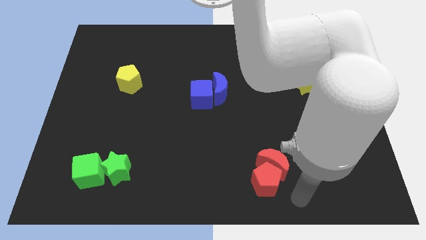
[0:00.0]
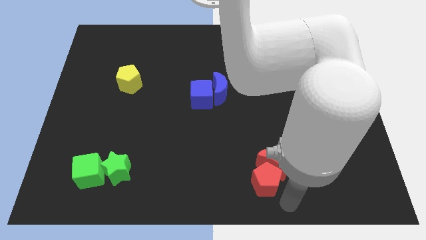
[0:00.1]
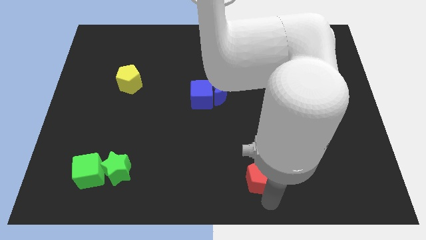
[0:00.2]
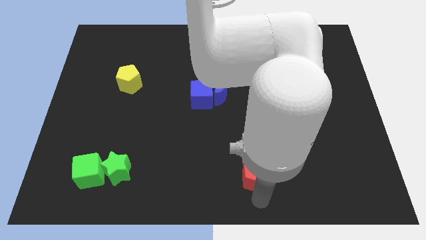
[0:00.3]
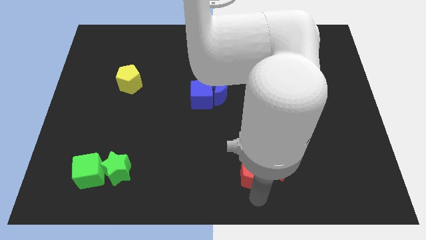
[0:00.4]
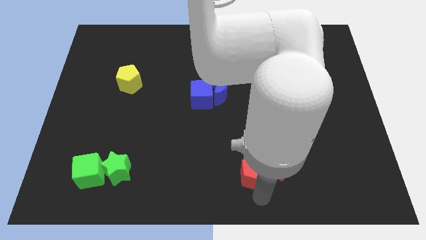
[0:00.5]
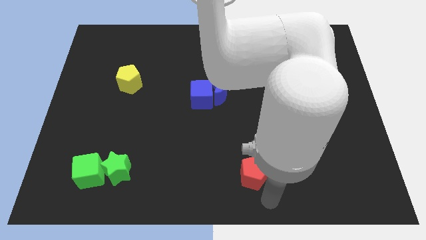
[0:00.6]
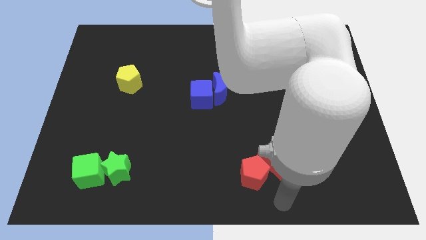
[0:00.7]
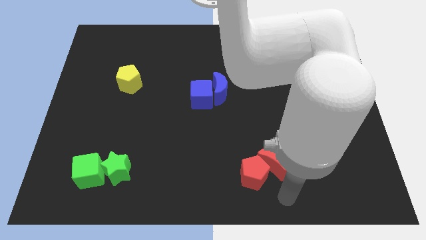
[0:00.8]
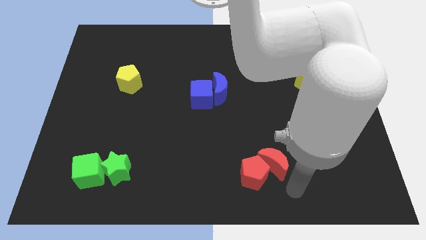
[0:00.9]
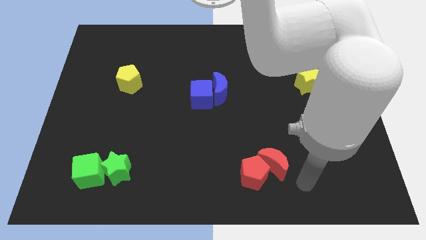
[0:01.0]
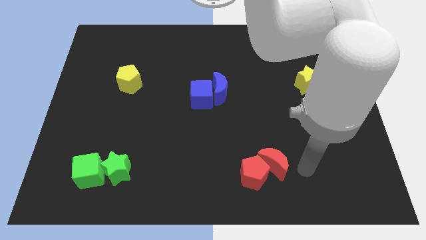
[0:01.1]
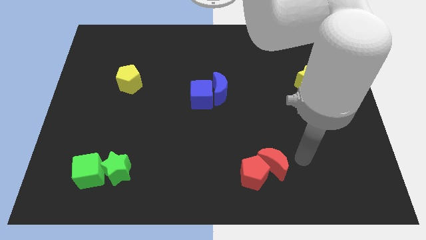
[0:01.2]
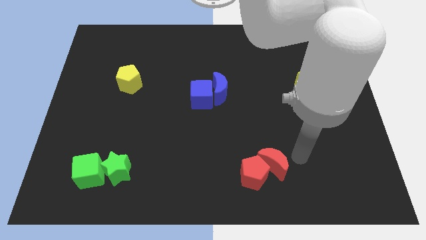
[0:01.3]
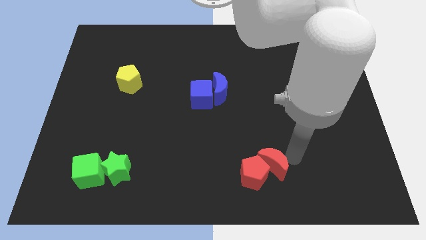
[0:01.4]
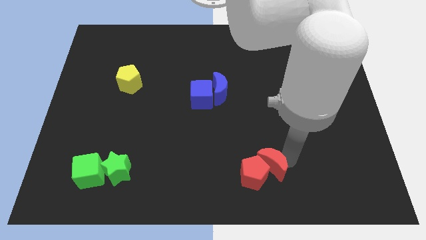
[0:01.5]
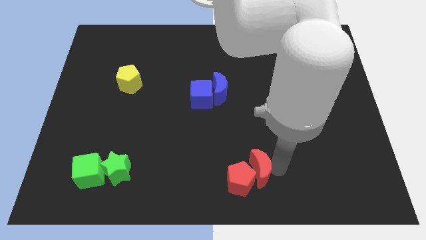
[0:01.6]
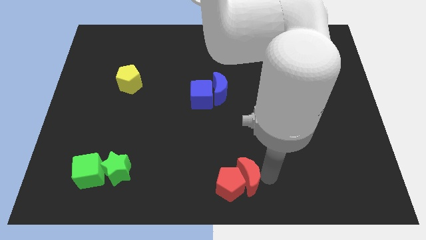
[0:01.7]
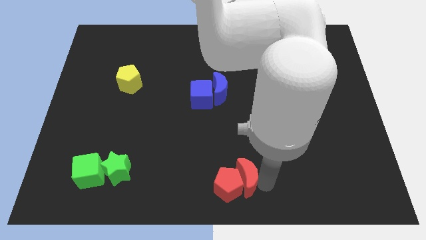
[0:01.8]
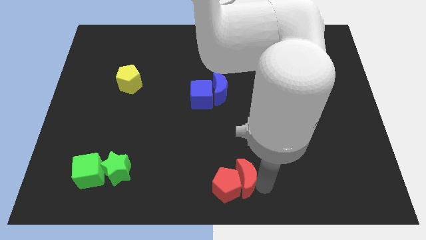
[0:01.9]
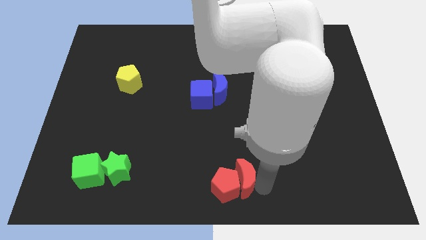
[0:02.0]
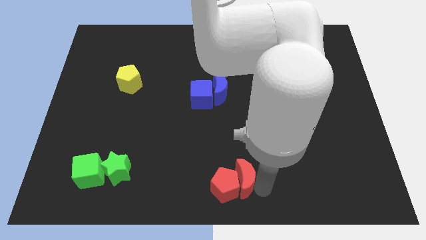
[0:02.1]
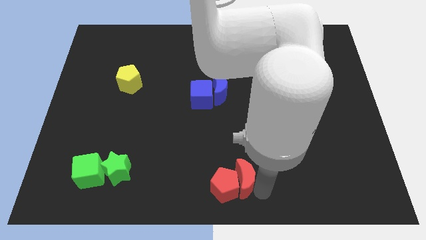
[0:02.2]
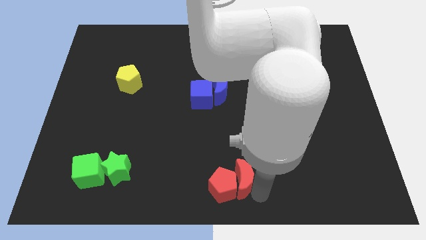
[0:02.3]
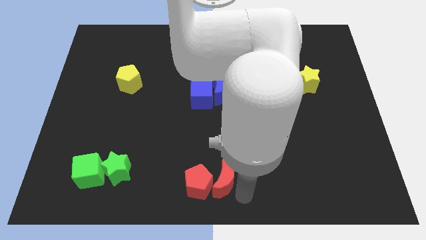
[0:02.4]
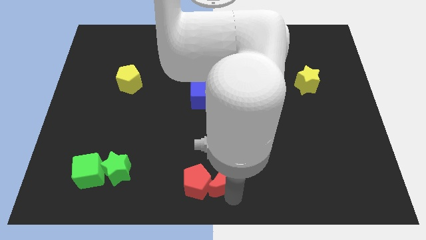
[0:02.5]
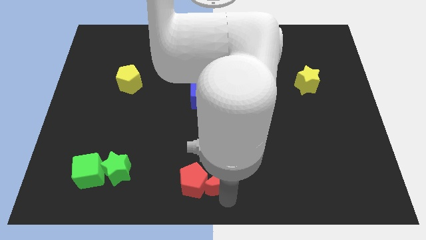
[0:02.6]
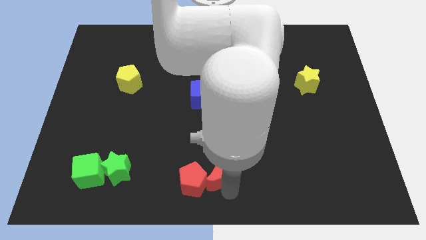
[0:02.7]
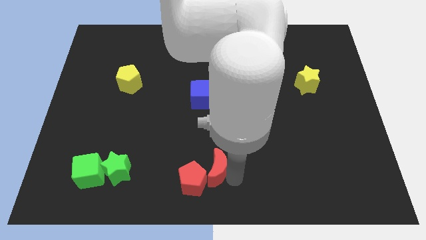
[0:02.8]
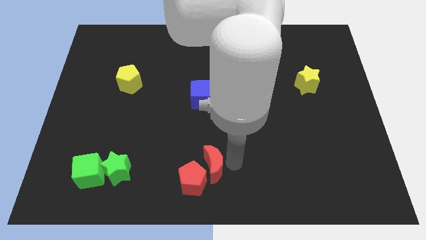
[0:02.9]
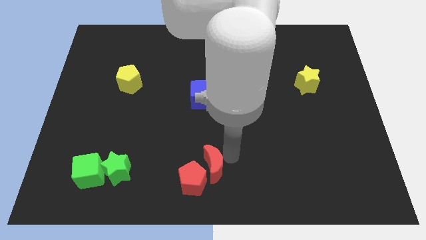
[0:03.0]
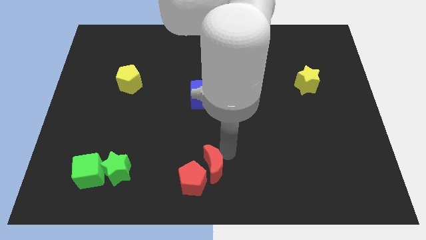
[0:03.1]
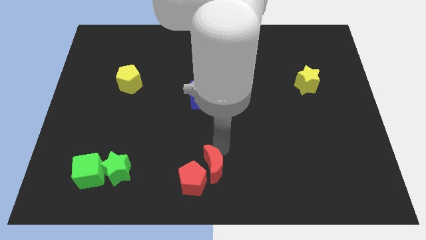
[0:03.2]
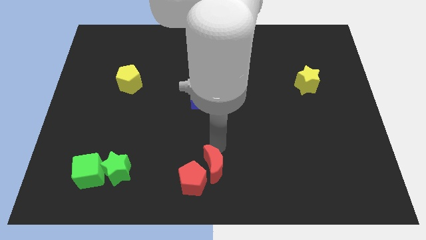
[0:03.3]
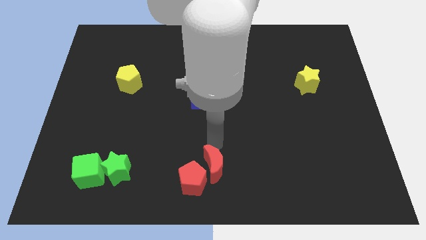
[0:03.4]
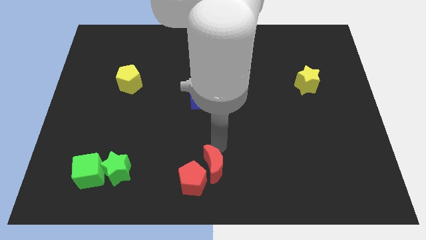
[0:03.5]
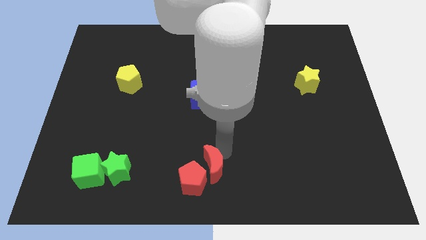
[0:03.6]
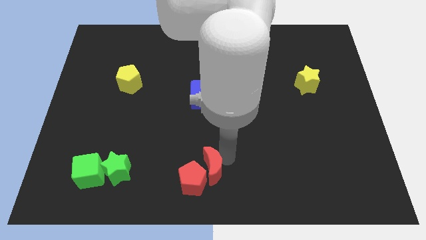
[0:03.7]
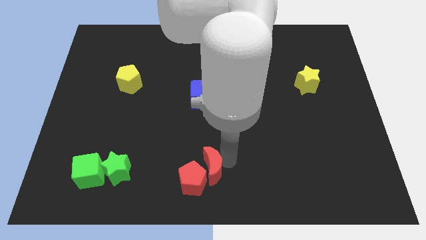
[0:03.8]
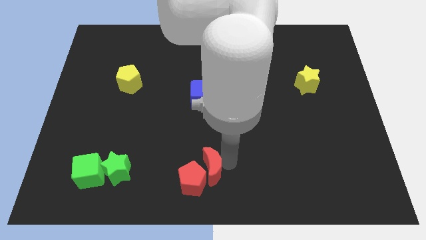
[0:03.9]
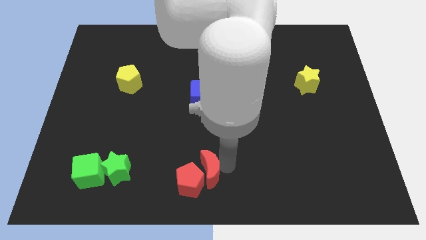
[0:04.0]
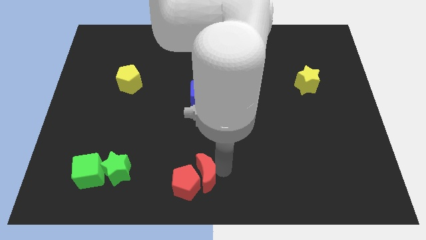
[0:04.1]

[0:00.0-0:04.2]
put the red blocks at the bottom center

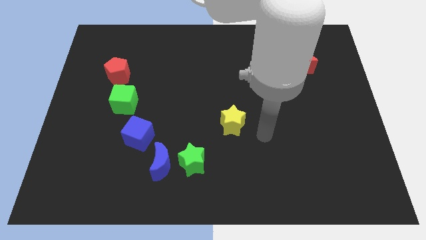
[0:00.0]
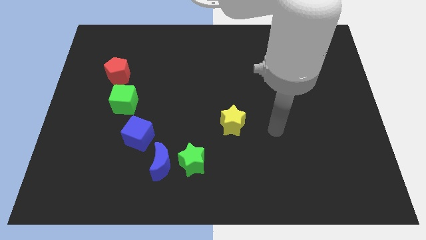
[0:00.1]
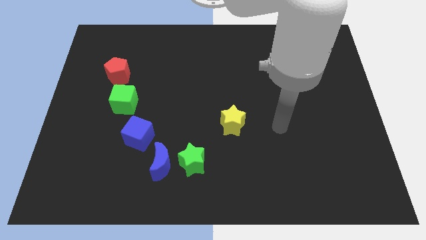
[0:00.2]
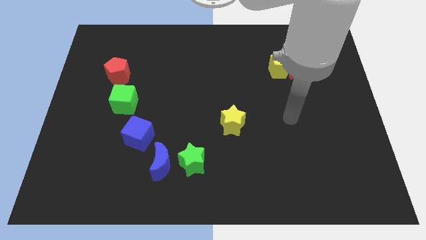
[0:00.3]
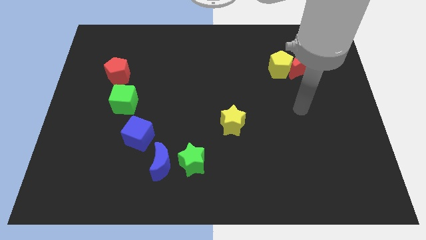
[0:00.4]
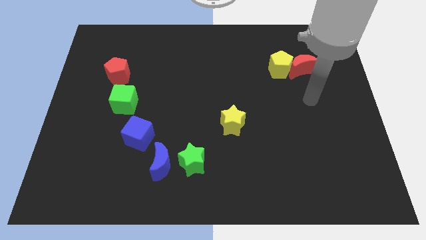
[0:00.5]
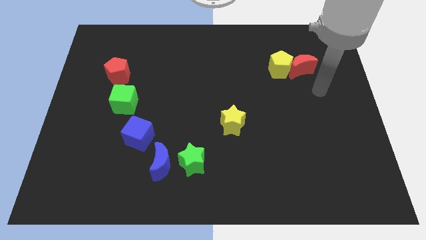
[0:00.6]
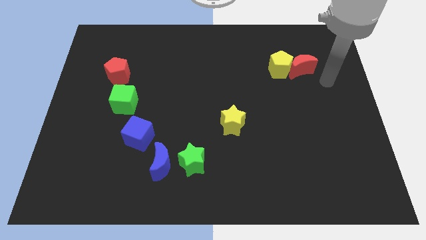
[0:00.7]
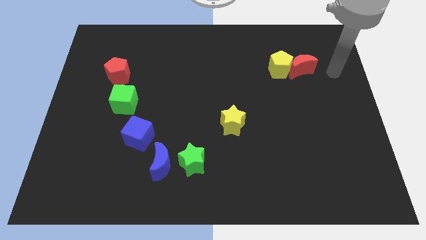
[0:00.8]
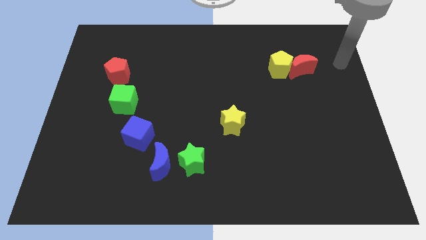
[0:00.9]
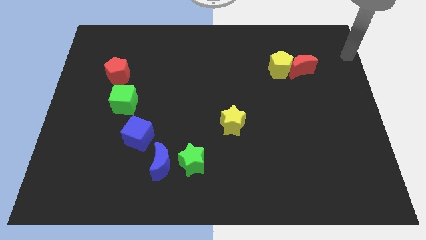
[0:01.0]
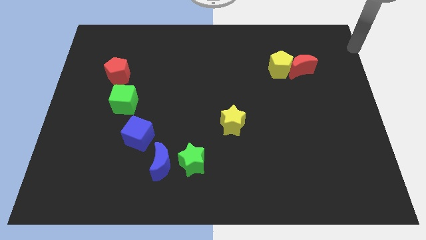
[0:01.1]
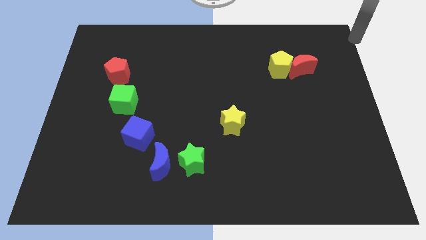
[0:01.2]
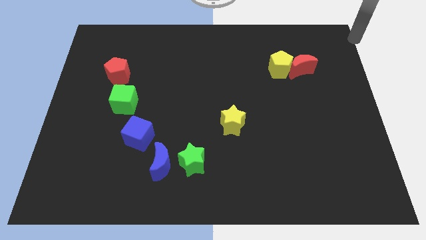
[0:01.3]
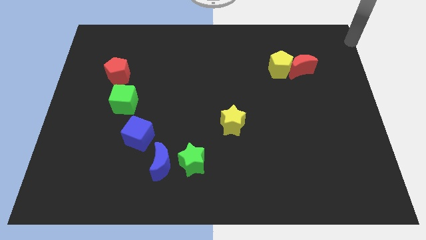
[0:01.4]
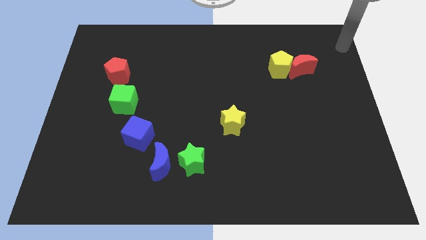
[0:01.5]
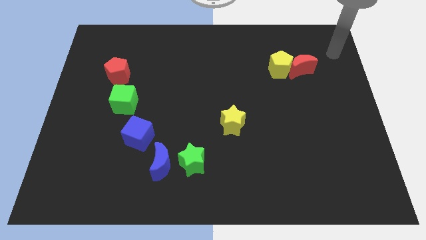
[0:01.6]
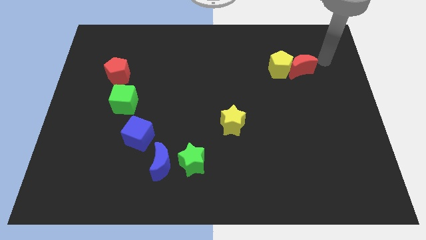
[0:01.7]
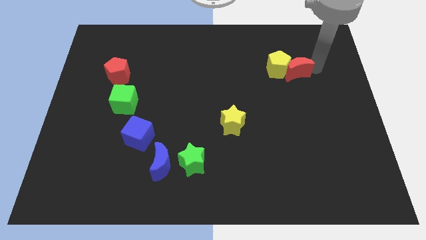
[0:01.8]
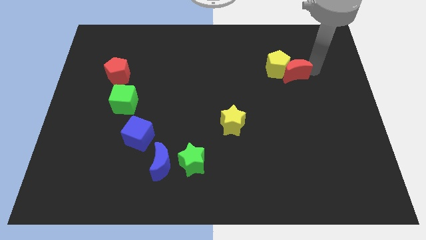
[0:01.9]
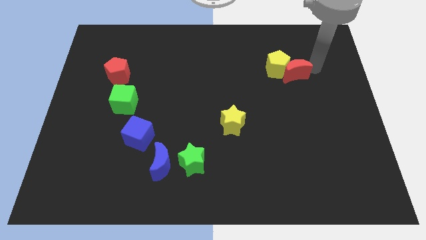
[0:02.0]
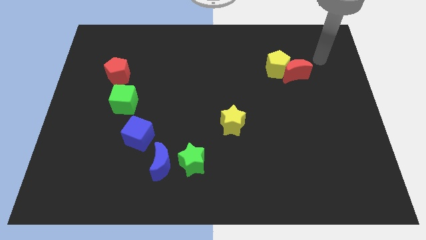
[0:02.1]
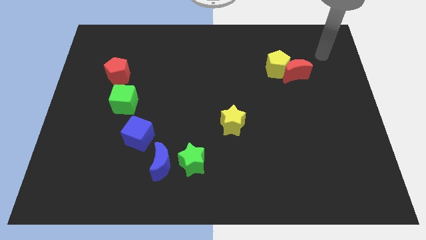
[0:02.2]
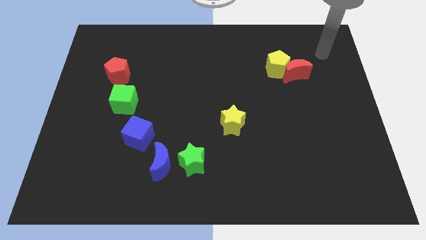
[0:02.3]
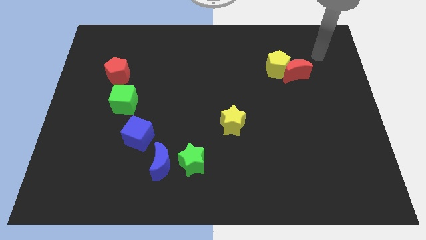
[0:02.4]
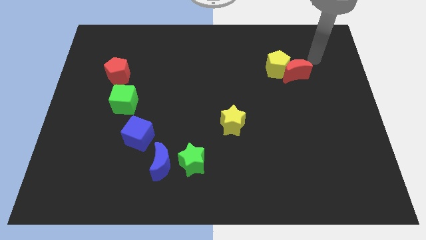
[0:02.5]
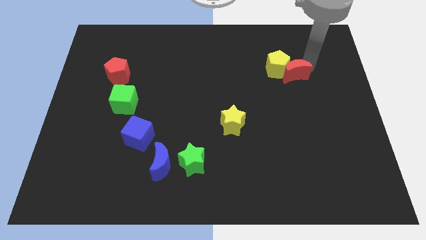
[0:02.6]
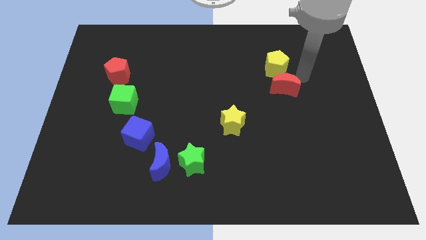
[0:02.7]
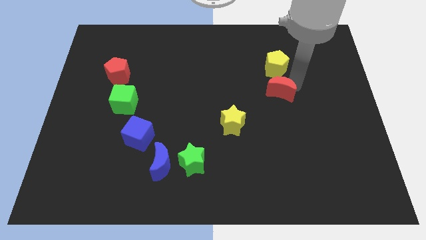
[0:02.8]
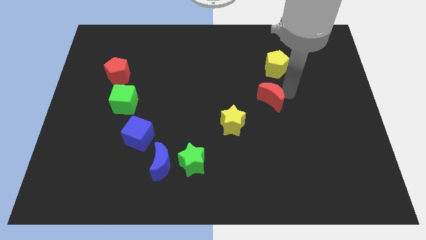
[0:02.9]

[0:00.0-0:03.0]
move the red crescent to the bottom of the yellow pentagon

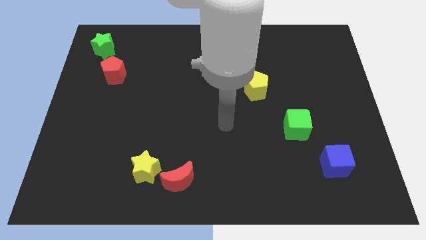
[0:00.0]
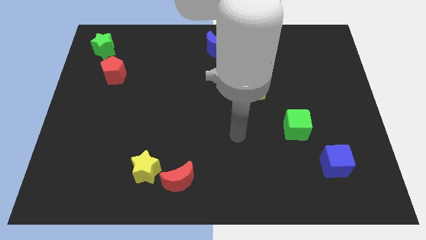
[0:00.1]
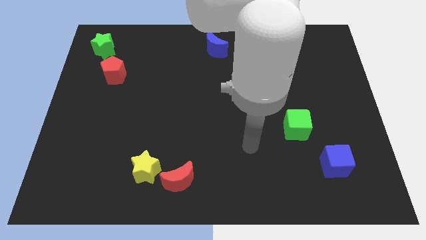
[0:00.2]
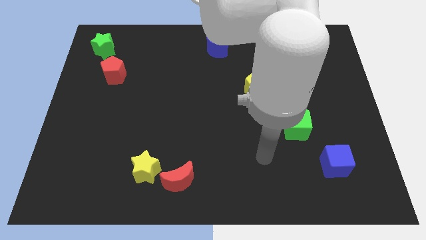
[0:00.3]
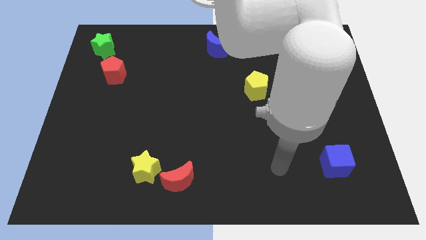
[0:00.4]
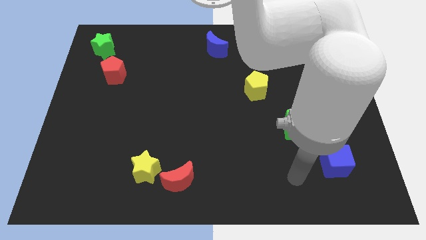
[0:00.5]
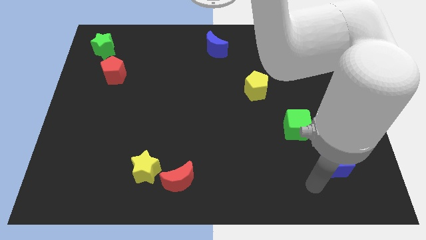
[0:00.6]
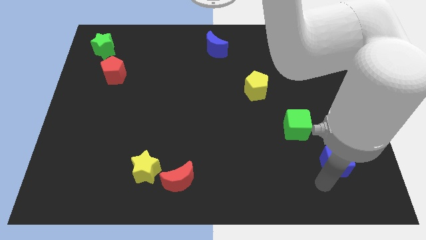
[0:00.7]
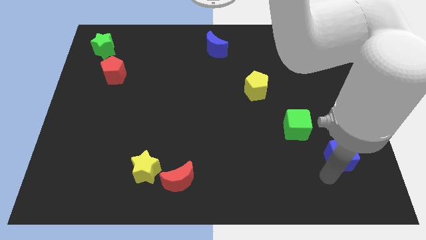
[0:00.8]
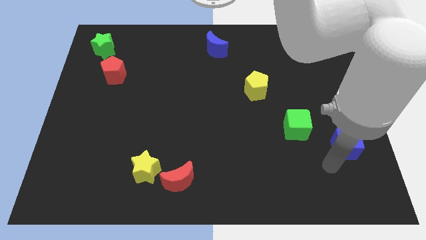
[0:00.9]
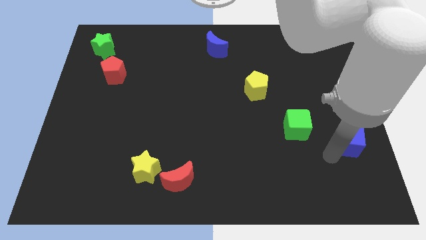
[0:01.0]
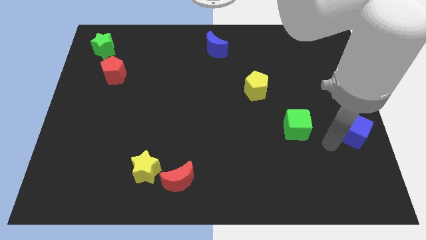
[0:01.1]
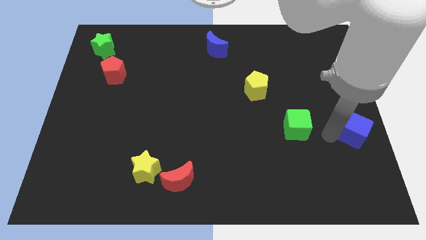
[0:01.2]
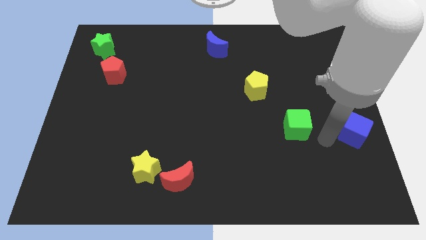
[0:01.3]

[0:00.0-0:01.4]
place blue cube to the right of green cube

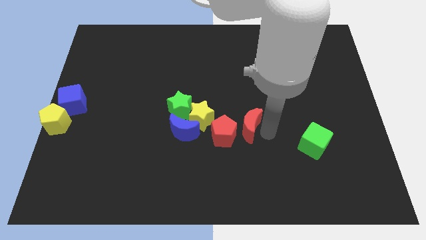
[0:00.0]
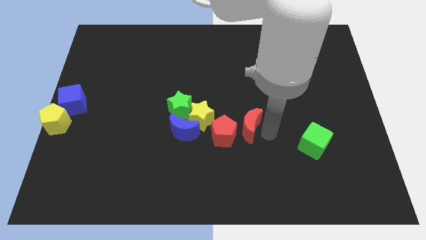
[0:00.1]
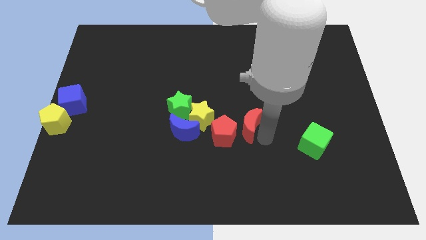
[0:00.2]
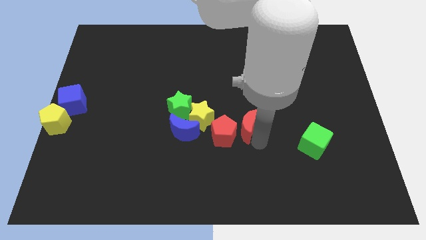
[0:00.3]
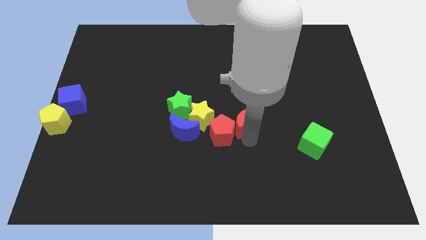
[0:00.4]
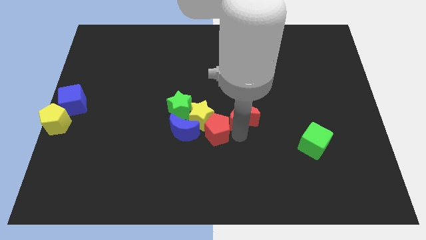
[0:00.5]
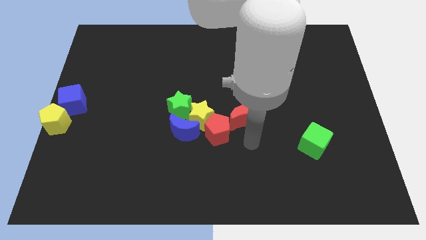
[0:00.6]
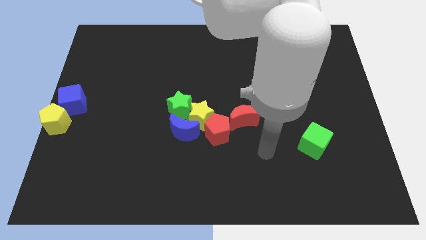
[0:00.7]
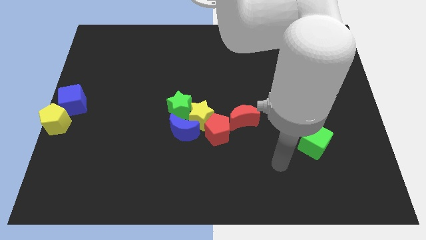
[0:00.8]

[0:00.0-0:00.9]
move the red crescent into the red pentagon
